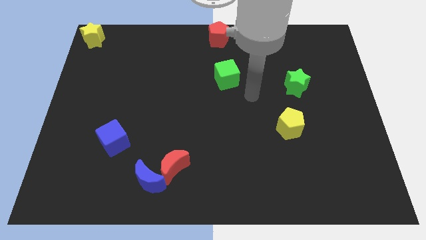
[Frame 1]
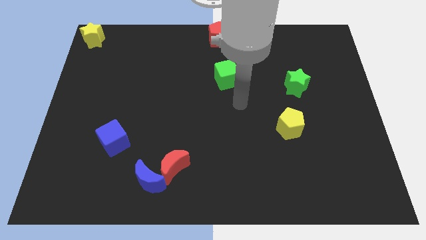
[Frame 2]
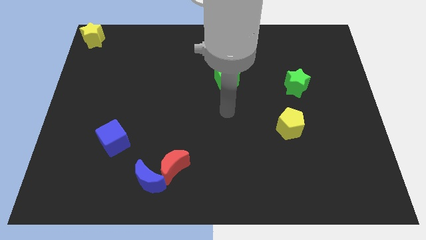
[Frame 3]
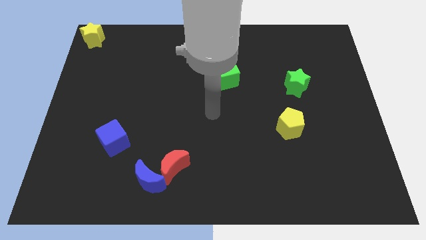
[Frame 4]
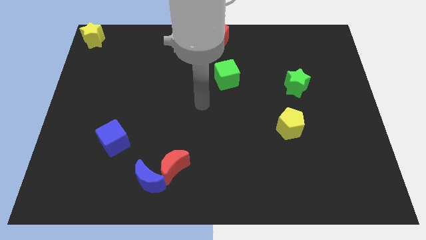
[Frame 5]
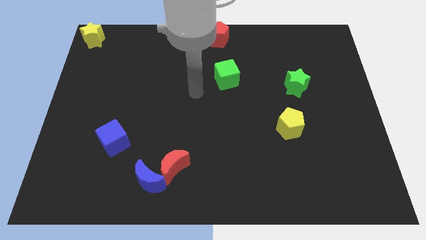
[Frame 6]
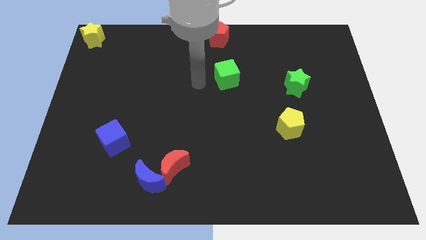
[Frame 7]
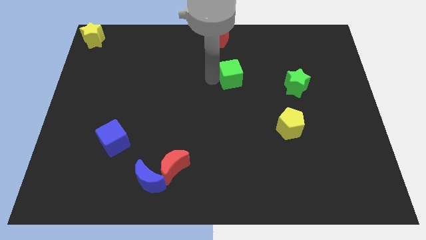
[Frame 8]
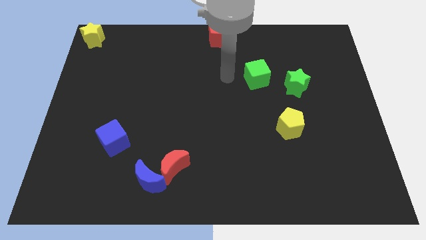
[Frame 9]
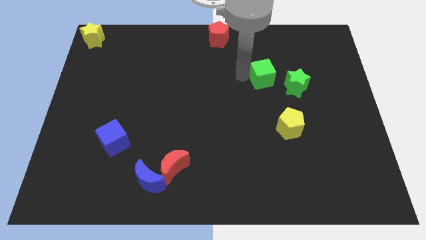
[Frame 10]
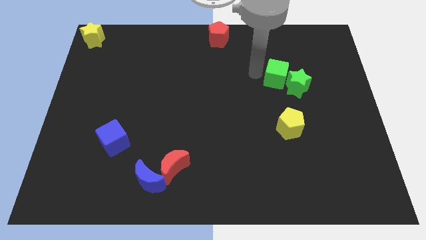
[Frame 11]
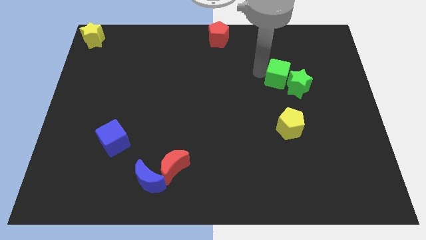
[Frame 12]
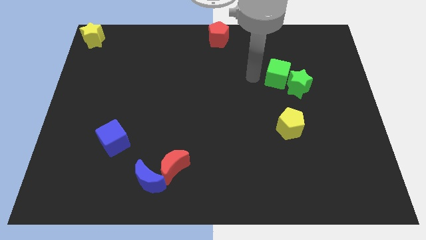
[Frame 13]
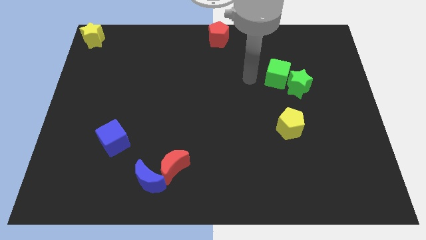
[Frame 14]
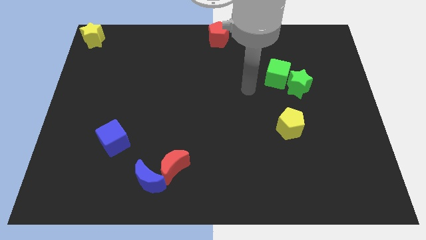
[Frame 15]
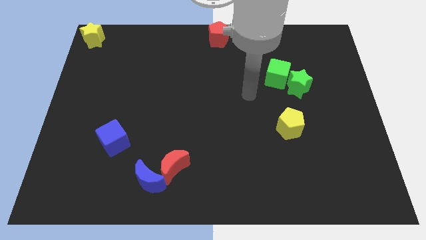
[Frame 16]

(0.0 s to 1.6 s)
push the green cube into green star

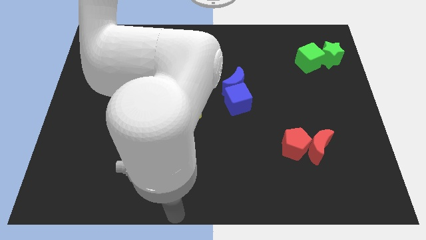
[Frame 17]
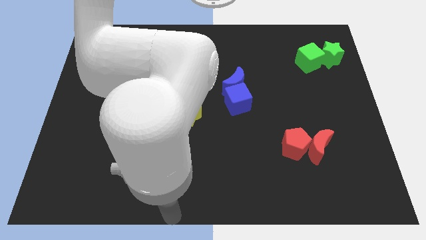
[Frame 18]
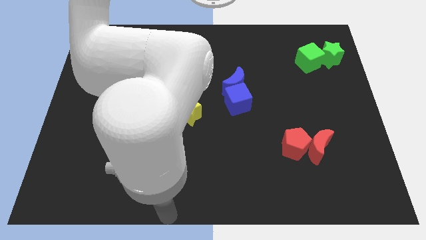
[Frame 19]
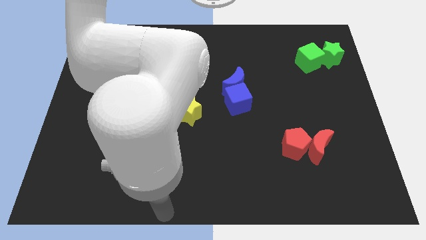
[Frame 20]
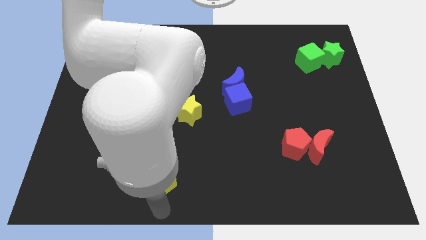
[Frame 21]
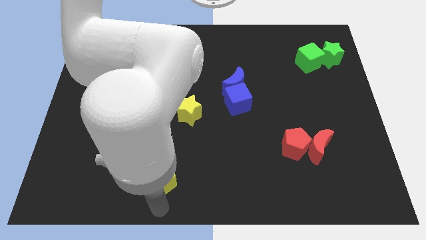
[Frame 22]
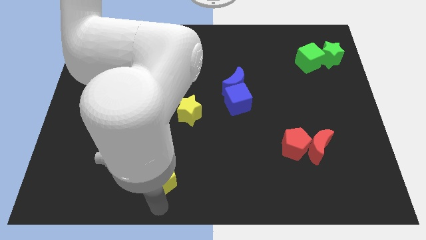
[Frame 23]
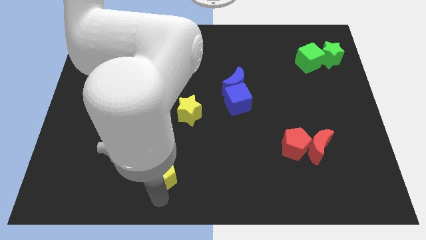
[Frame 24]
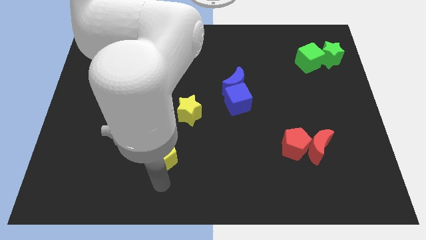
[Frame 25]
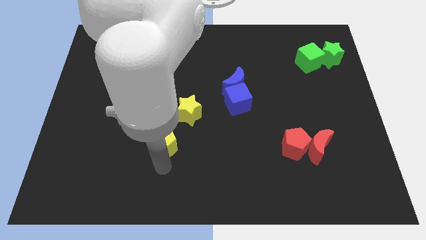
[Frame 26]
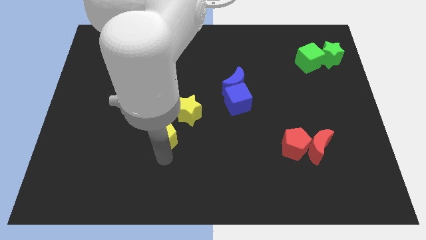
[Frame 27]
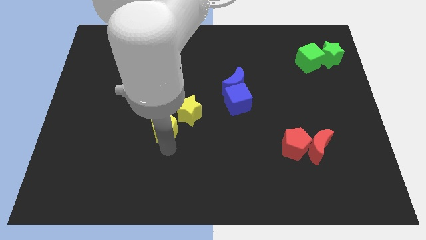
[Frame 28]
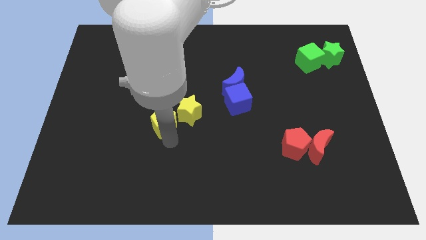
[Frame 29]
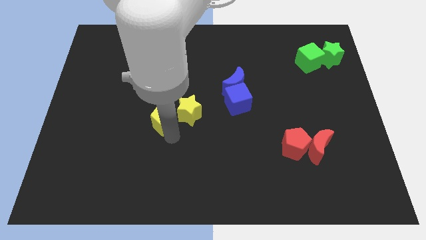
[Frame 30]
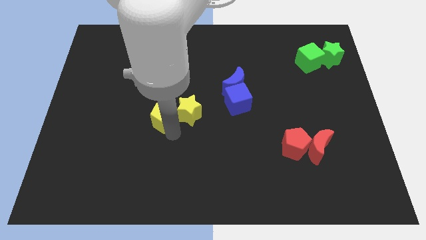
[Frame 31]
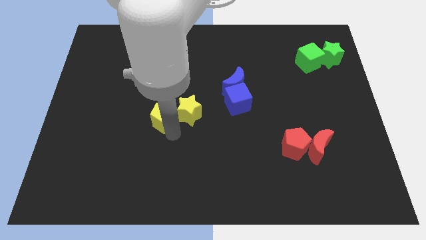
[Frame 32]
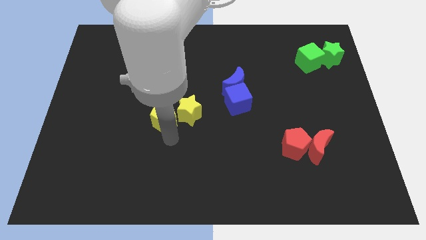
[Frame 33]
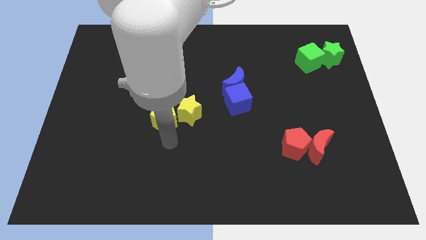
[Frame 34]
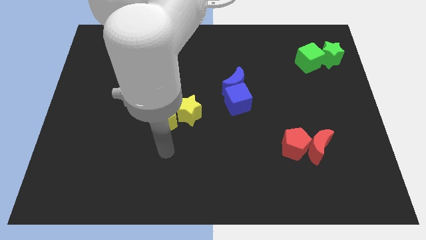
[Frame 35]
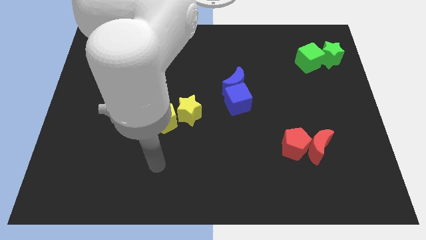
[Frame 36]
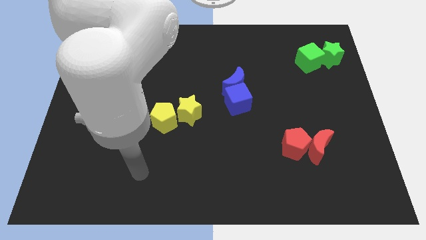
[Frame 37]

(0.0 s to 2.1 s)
push the yellow pentagon towards the top side of the board

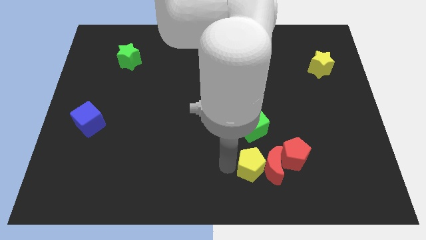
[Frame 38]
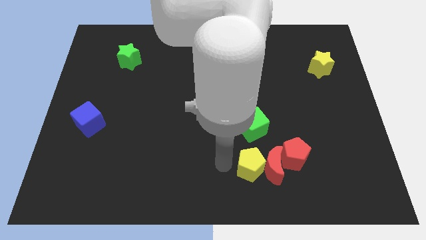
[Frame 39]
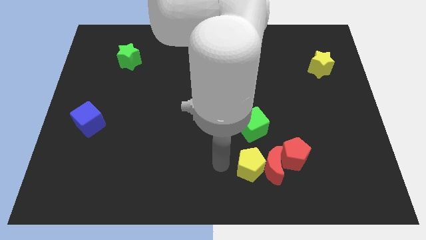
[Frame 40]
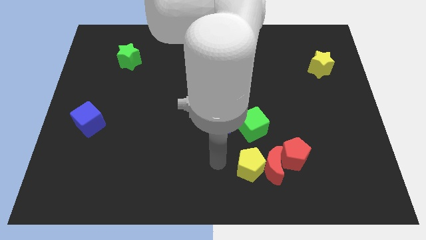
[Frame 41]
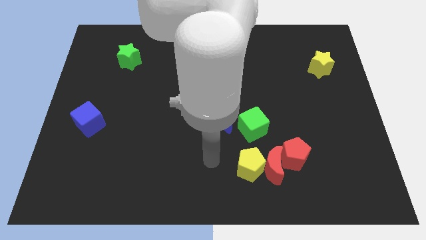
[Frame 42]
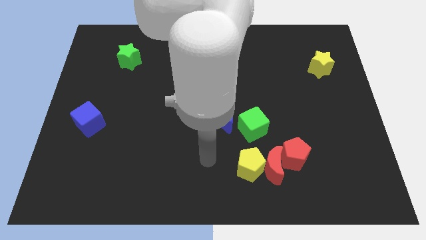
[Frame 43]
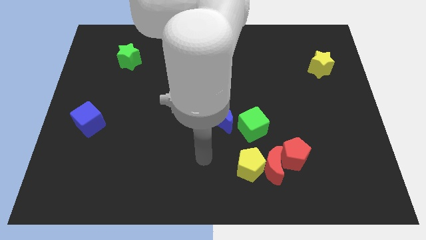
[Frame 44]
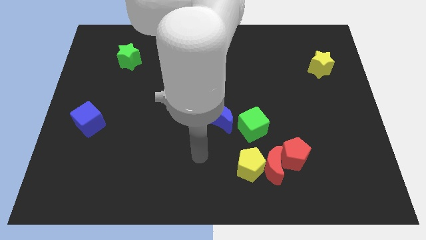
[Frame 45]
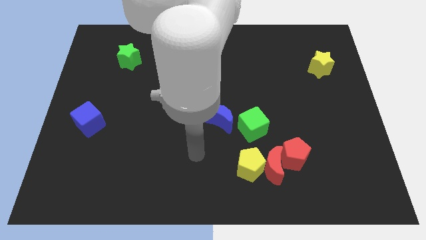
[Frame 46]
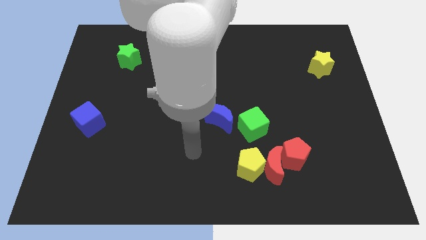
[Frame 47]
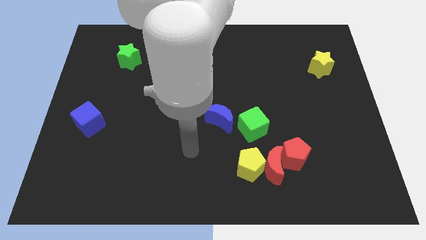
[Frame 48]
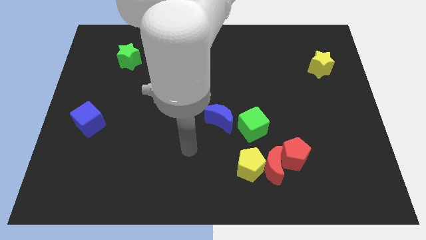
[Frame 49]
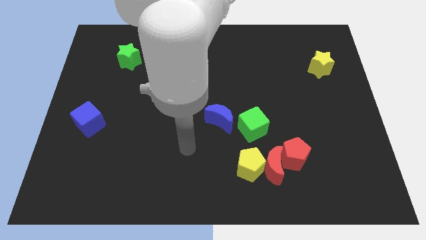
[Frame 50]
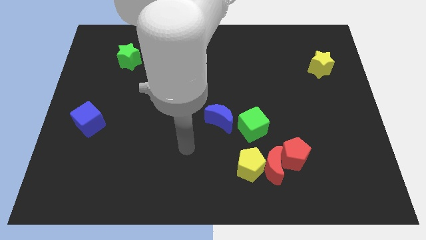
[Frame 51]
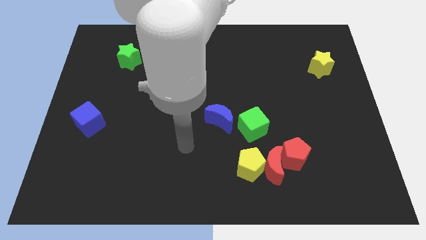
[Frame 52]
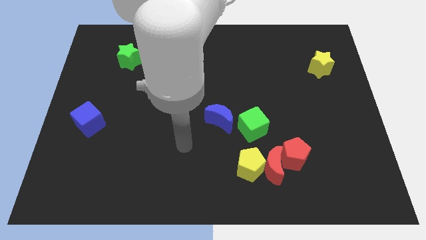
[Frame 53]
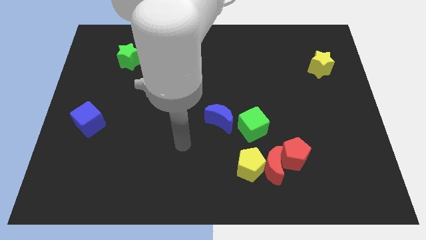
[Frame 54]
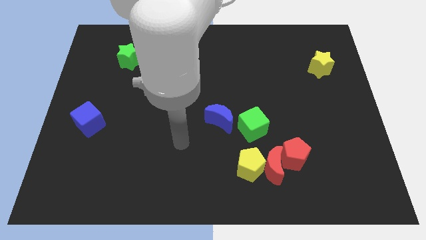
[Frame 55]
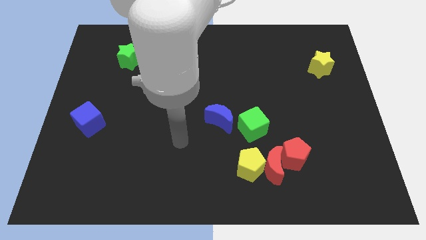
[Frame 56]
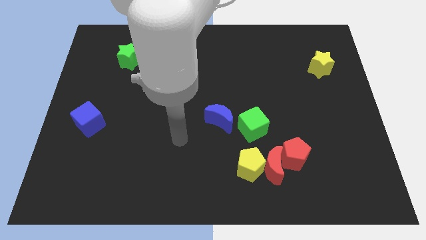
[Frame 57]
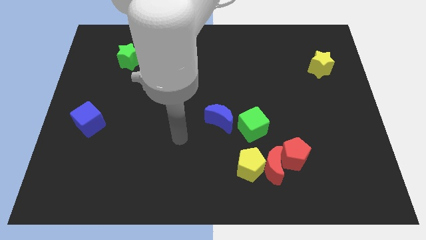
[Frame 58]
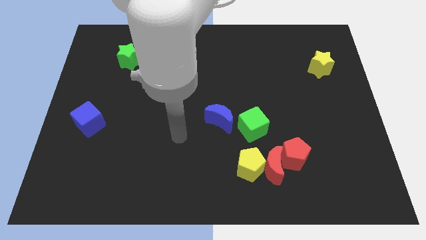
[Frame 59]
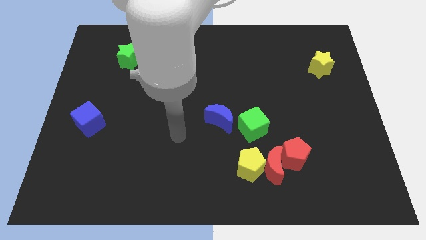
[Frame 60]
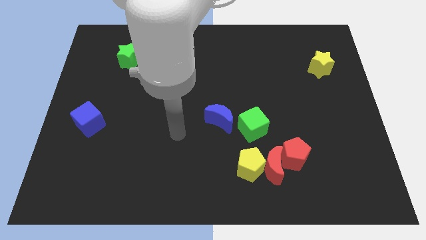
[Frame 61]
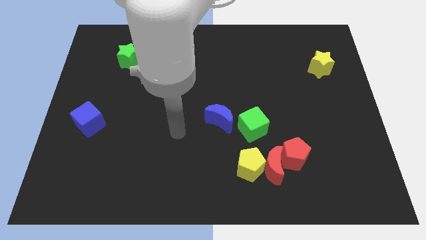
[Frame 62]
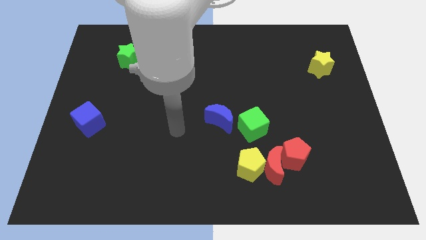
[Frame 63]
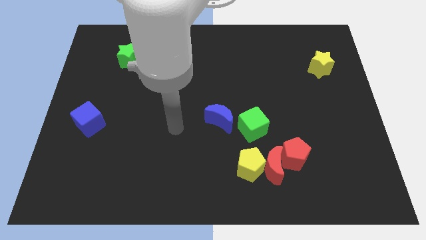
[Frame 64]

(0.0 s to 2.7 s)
move the arm away from the yellow pentagon

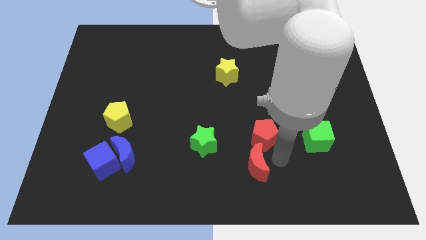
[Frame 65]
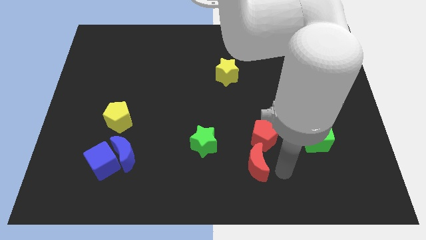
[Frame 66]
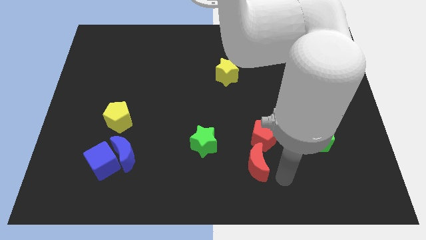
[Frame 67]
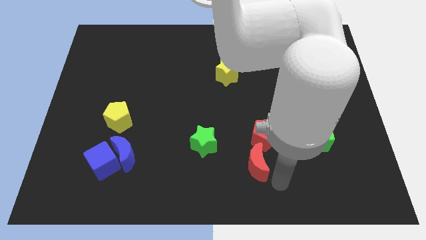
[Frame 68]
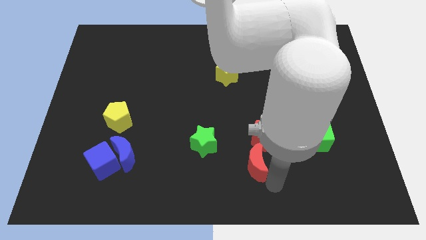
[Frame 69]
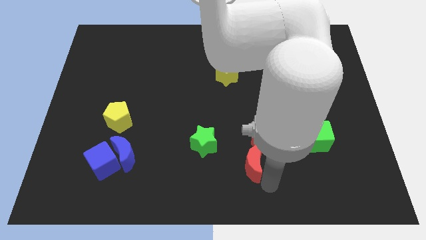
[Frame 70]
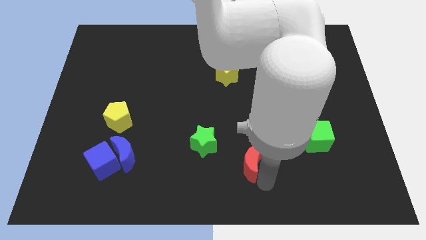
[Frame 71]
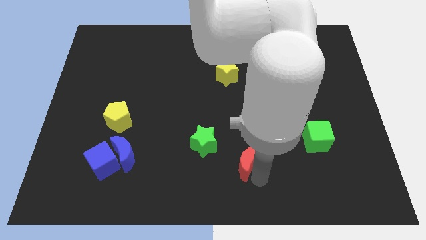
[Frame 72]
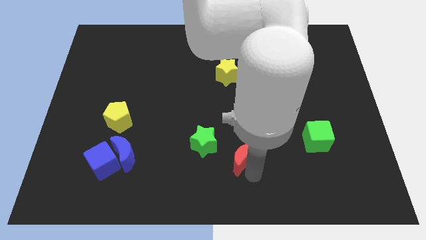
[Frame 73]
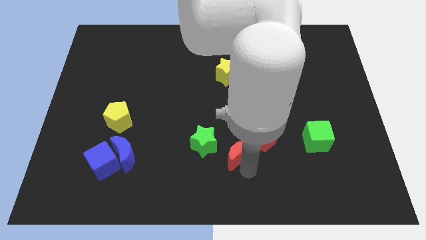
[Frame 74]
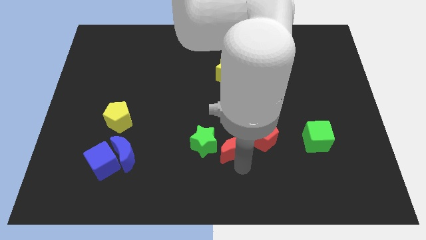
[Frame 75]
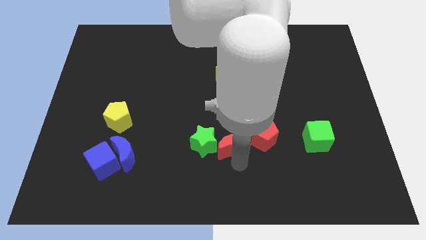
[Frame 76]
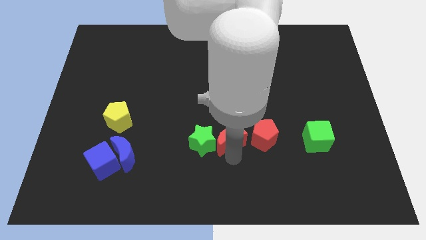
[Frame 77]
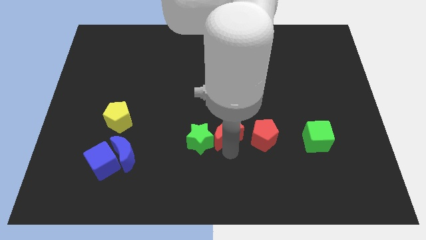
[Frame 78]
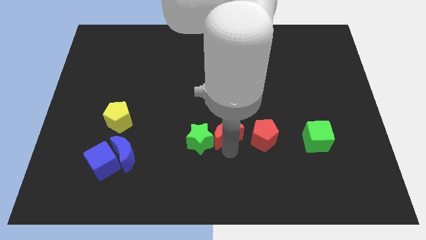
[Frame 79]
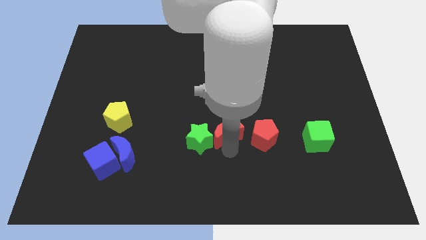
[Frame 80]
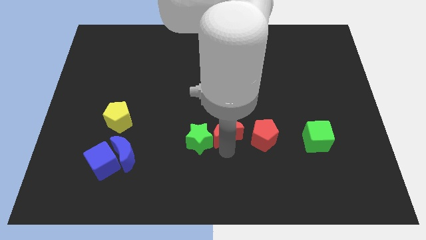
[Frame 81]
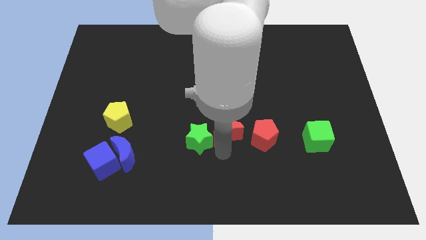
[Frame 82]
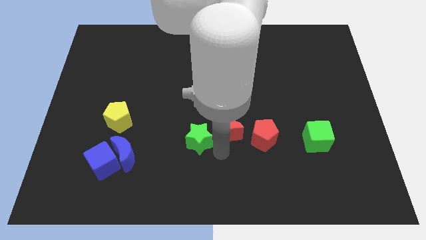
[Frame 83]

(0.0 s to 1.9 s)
push the red moon to the right of green star

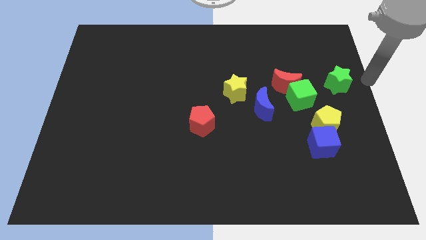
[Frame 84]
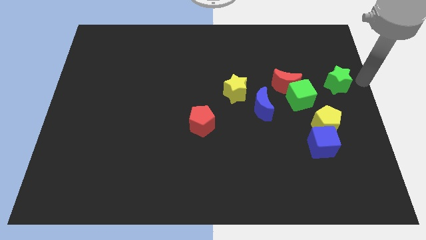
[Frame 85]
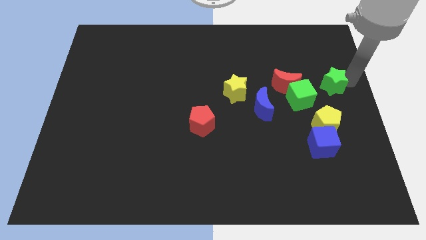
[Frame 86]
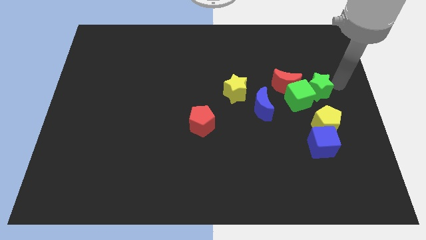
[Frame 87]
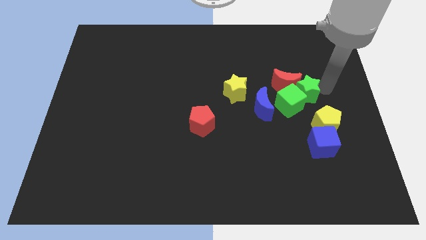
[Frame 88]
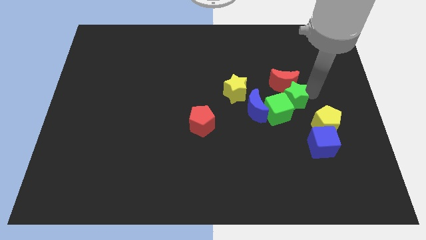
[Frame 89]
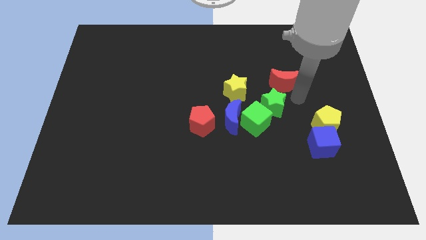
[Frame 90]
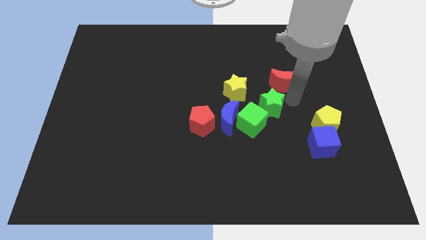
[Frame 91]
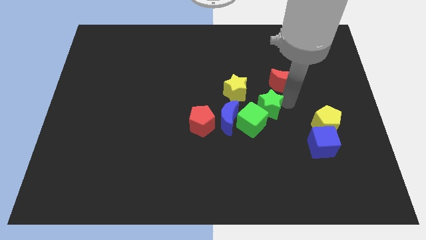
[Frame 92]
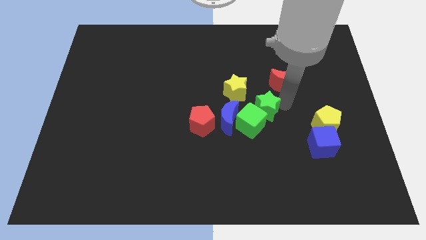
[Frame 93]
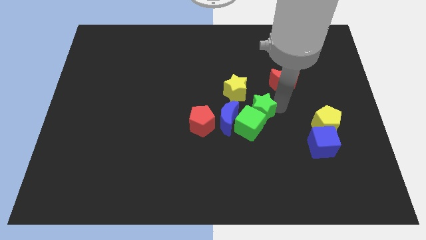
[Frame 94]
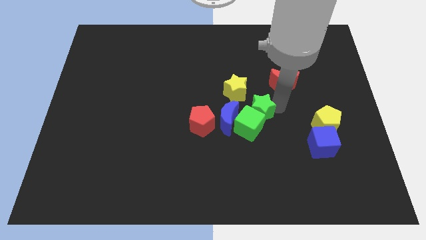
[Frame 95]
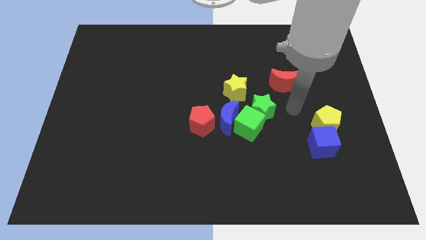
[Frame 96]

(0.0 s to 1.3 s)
push the green star into green cube
